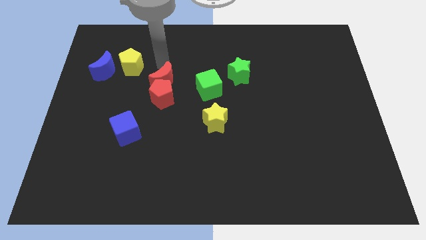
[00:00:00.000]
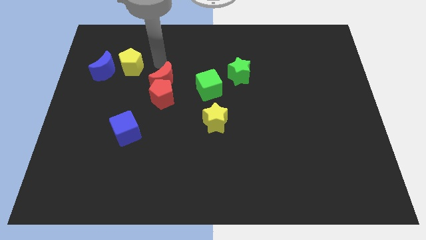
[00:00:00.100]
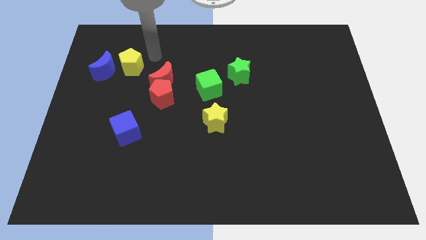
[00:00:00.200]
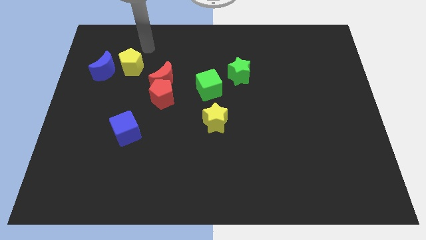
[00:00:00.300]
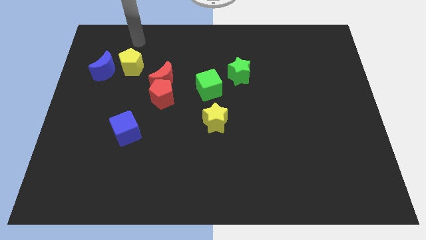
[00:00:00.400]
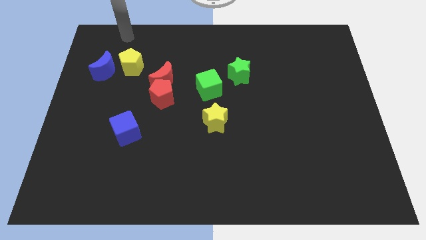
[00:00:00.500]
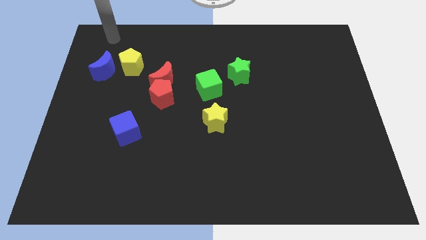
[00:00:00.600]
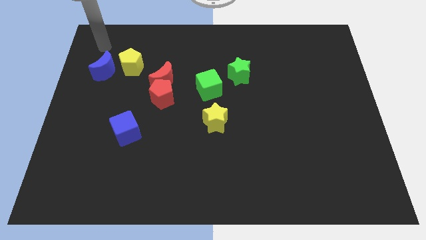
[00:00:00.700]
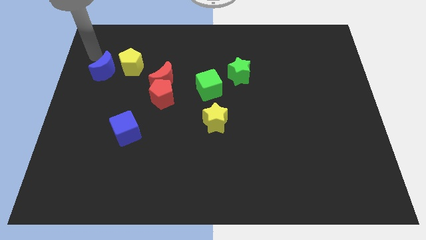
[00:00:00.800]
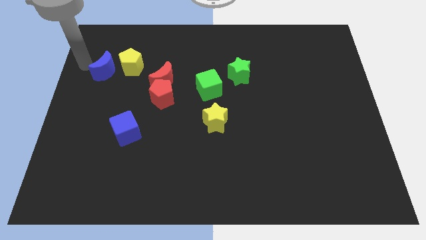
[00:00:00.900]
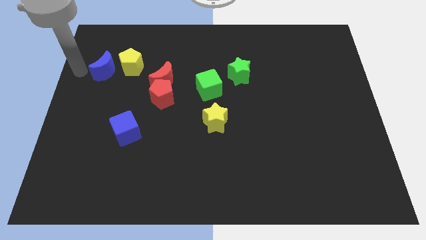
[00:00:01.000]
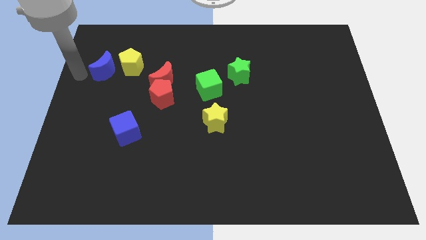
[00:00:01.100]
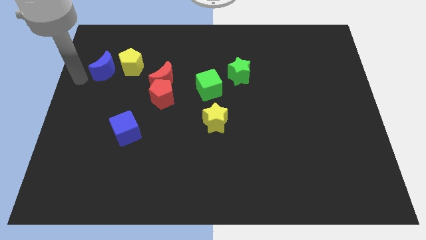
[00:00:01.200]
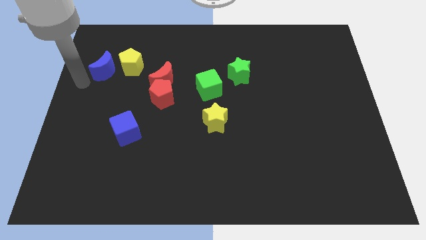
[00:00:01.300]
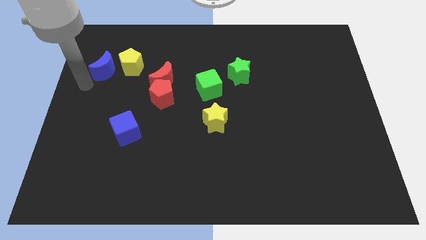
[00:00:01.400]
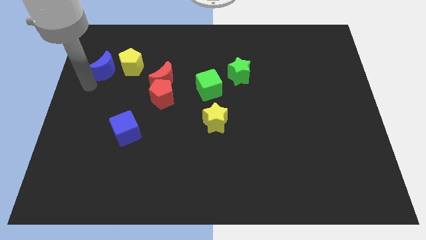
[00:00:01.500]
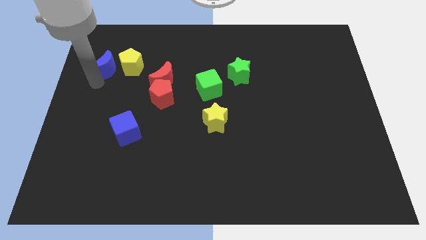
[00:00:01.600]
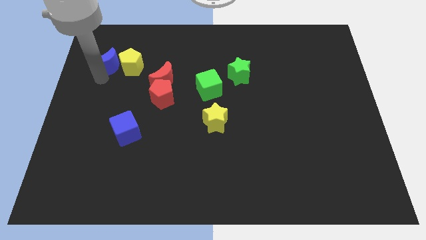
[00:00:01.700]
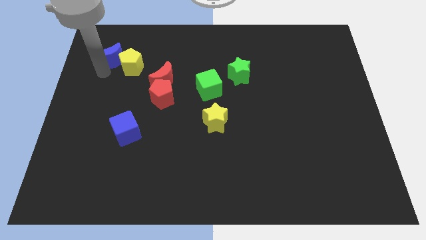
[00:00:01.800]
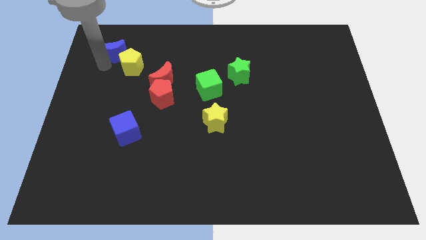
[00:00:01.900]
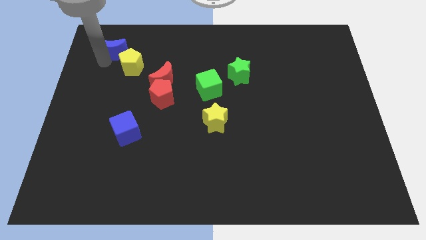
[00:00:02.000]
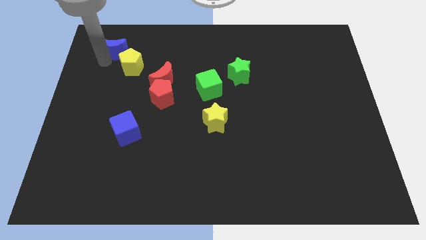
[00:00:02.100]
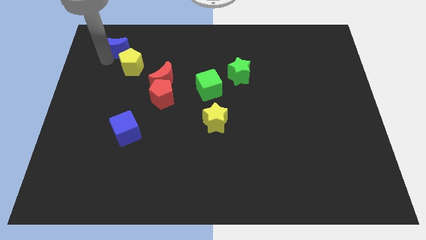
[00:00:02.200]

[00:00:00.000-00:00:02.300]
push the blue moon towards the top left of yellow pentagon

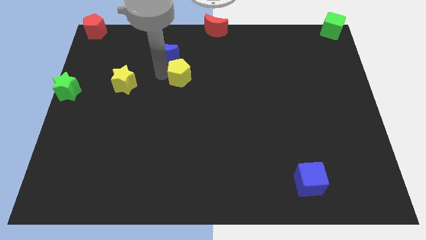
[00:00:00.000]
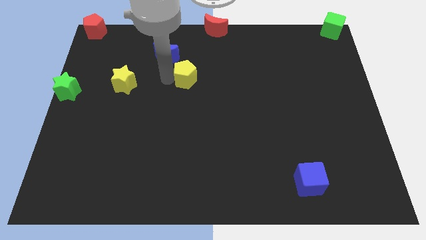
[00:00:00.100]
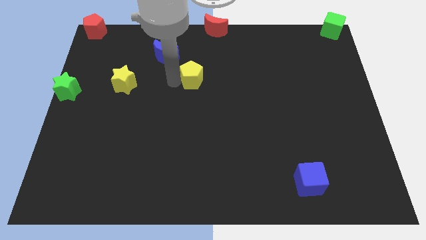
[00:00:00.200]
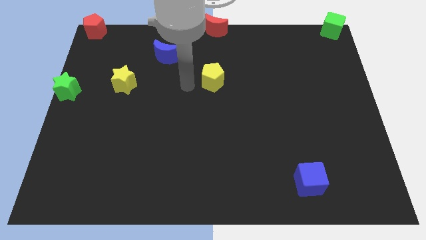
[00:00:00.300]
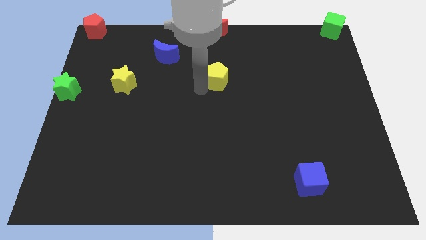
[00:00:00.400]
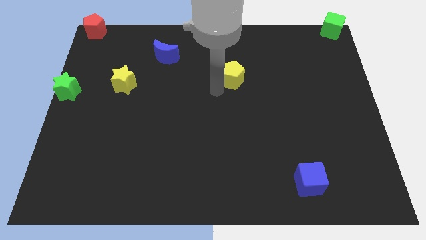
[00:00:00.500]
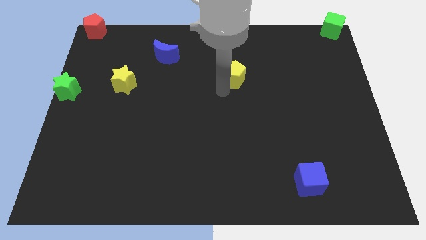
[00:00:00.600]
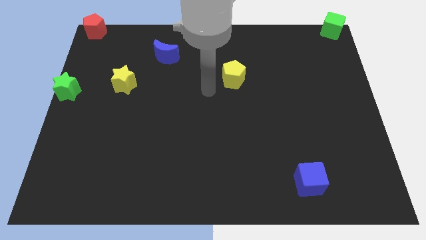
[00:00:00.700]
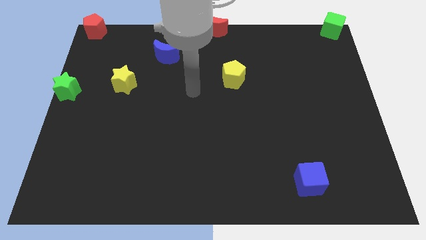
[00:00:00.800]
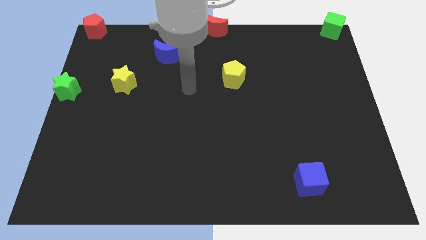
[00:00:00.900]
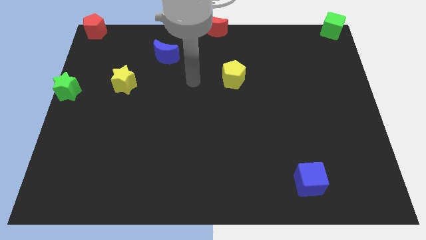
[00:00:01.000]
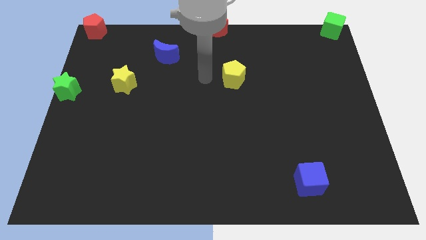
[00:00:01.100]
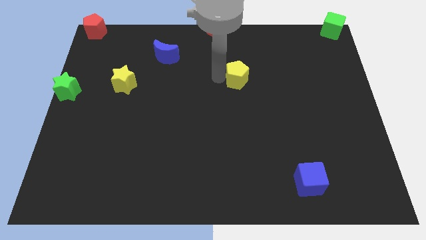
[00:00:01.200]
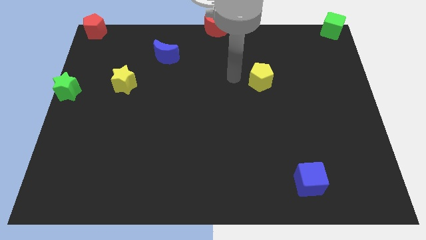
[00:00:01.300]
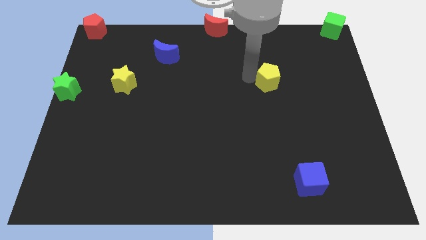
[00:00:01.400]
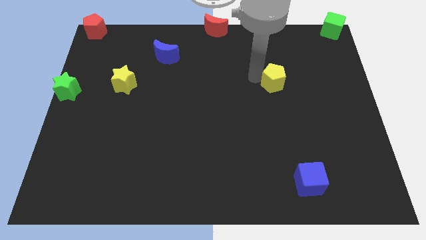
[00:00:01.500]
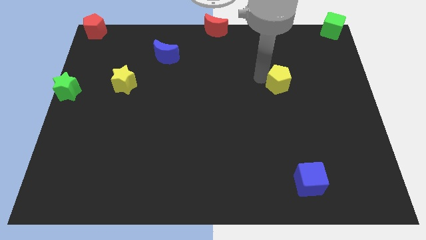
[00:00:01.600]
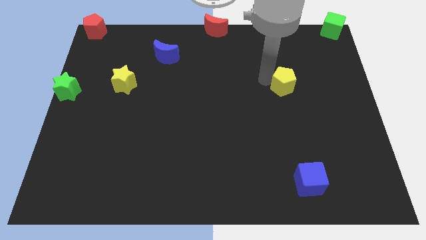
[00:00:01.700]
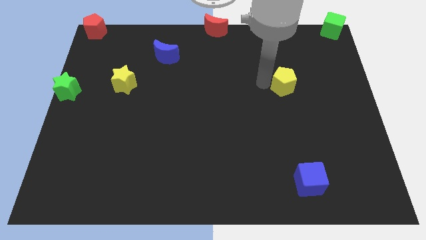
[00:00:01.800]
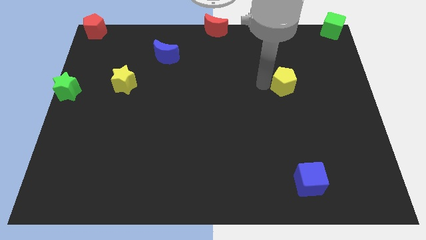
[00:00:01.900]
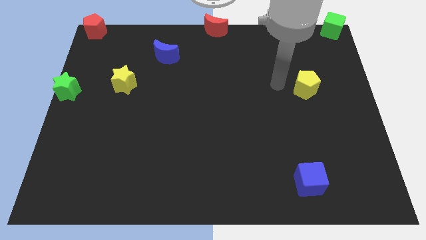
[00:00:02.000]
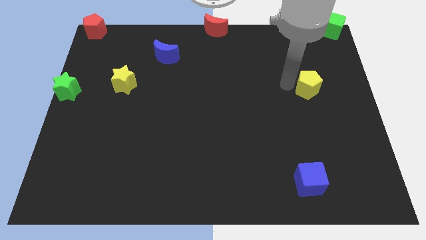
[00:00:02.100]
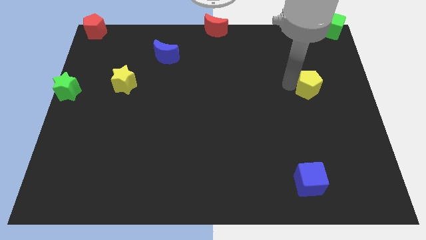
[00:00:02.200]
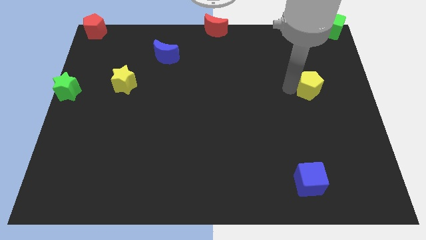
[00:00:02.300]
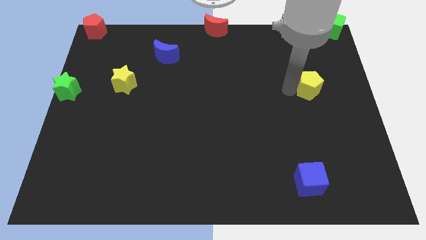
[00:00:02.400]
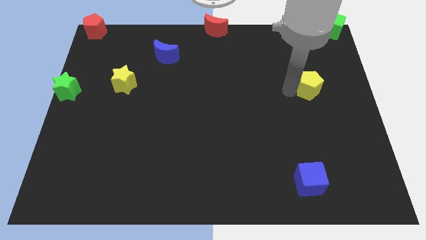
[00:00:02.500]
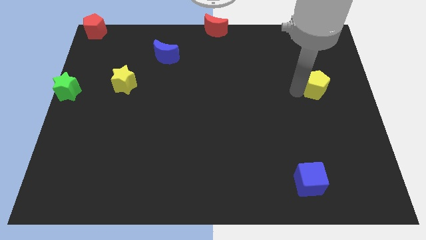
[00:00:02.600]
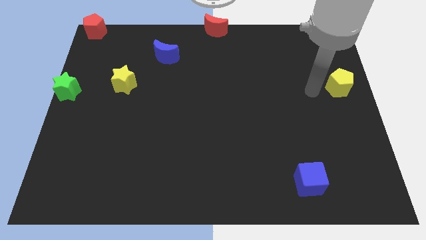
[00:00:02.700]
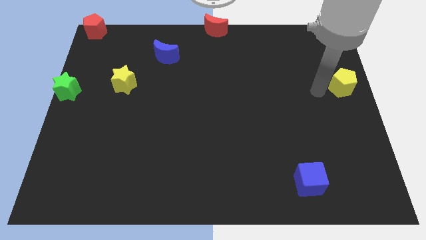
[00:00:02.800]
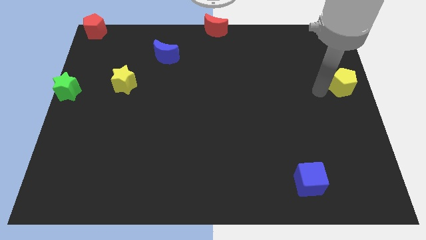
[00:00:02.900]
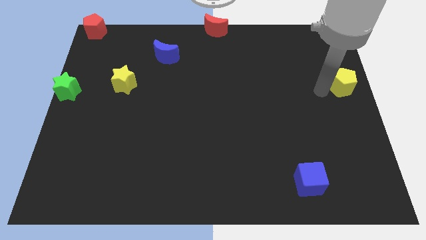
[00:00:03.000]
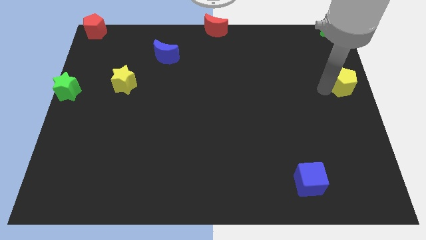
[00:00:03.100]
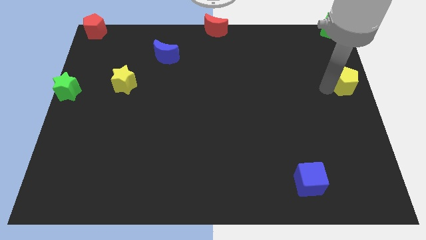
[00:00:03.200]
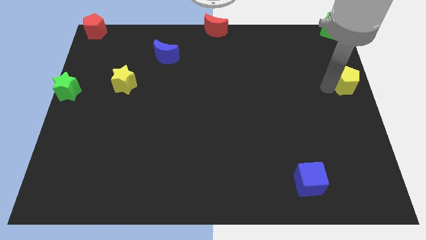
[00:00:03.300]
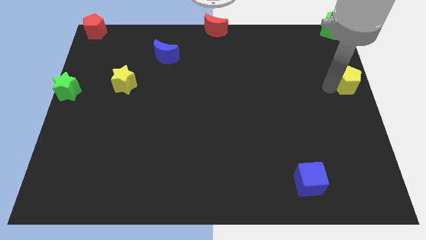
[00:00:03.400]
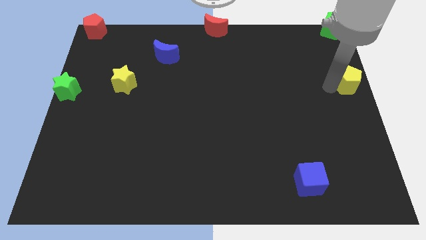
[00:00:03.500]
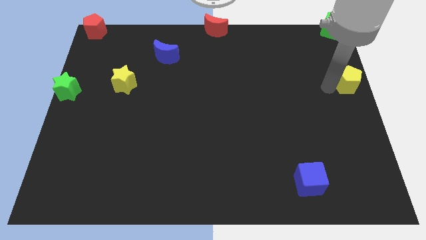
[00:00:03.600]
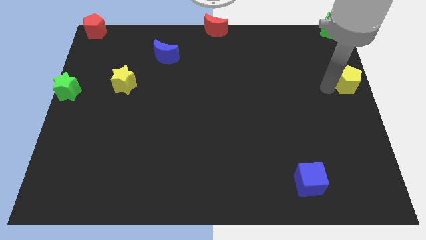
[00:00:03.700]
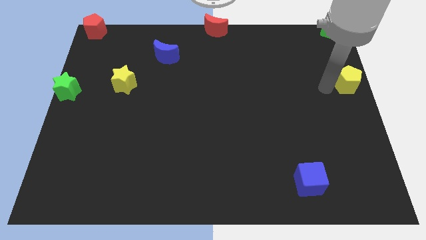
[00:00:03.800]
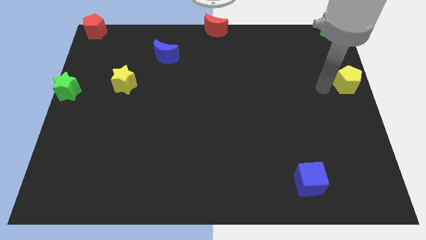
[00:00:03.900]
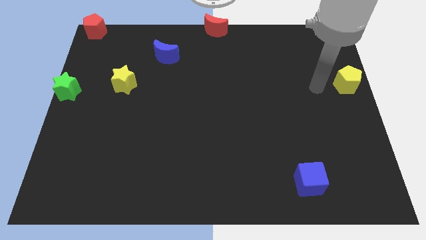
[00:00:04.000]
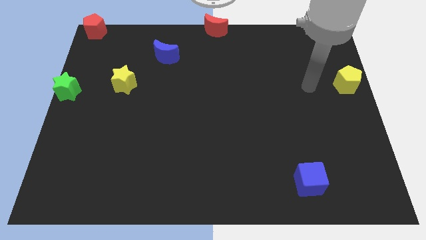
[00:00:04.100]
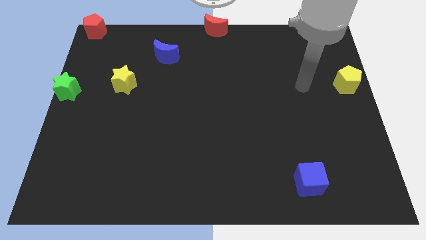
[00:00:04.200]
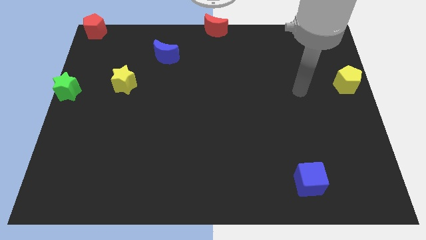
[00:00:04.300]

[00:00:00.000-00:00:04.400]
move the yellow pentagon to the right center of the board

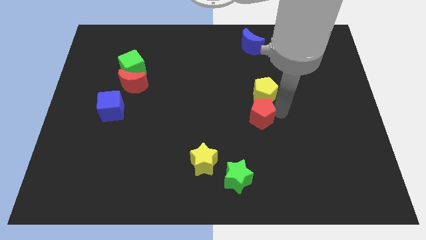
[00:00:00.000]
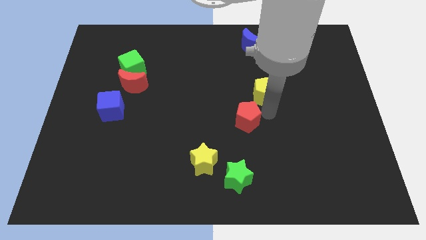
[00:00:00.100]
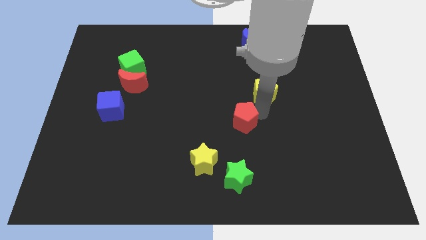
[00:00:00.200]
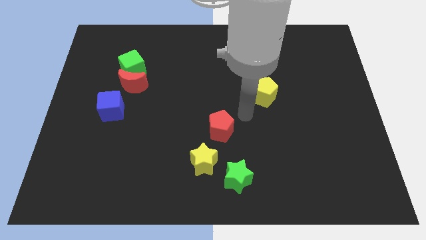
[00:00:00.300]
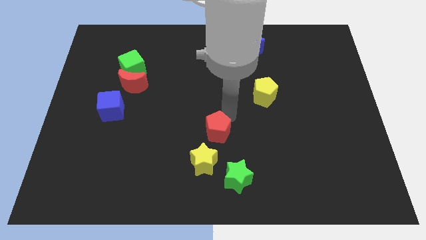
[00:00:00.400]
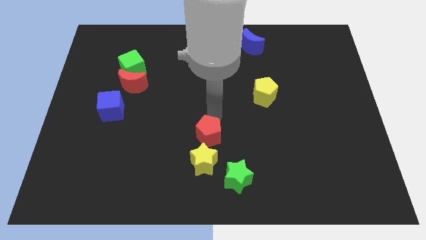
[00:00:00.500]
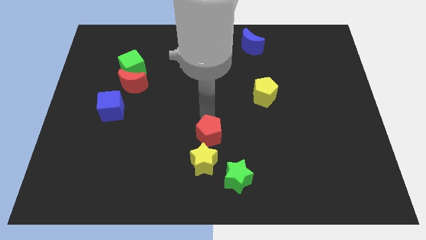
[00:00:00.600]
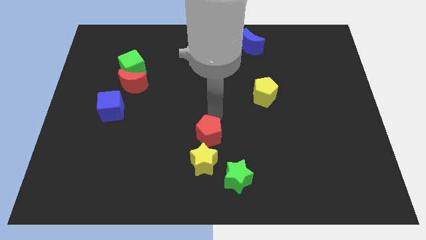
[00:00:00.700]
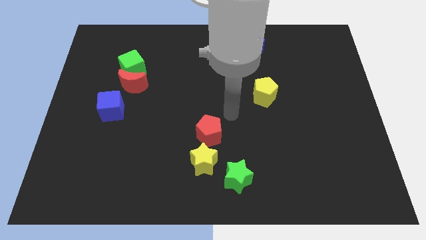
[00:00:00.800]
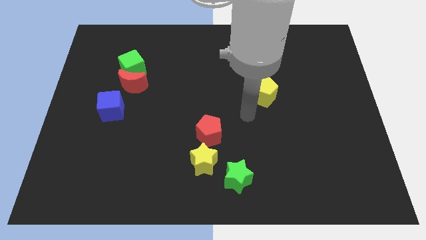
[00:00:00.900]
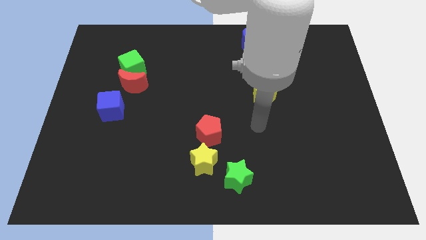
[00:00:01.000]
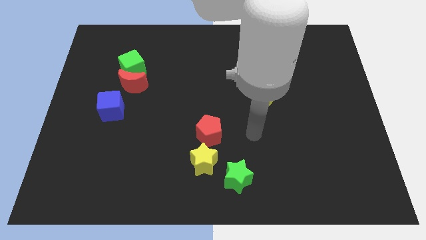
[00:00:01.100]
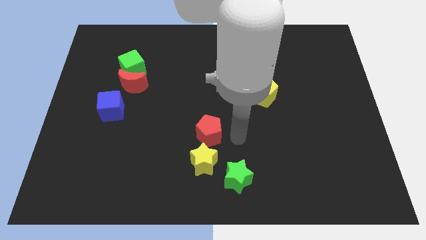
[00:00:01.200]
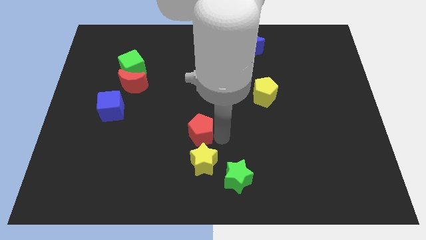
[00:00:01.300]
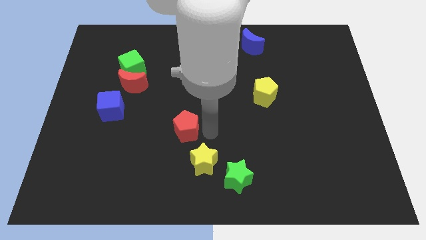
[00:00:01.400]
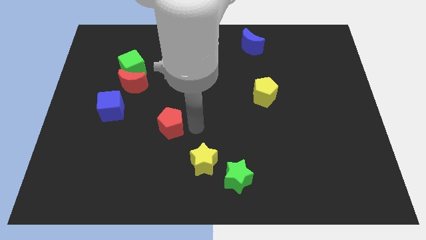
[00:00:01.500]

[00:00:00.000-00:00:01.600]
slide the red pentagon away from the yellow pentagon

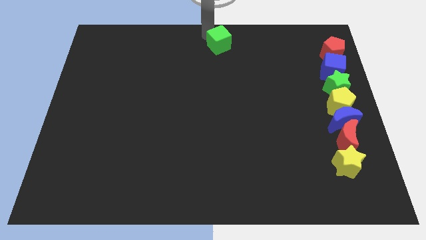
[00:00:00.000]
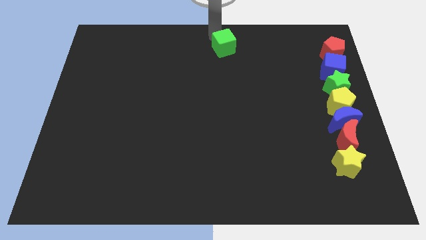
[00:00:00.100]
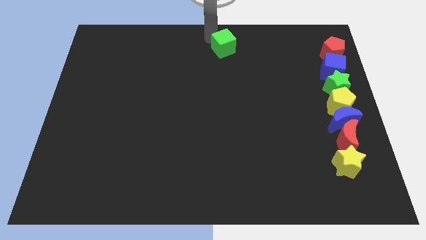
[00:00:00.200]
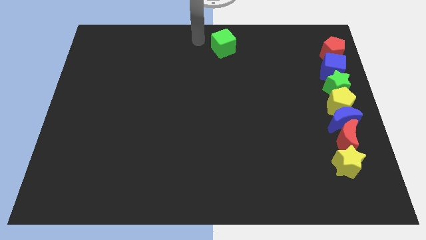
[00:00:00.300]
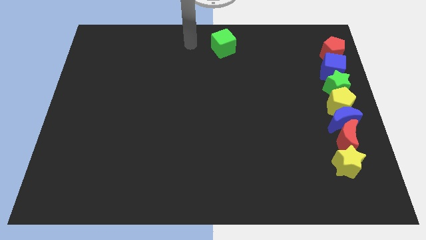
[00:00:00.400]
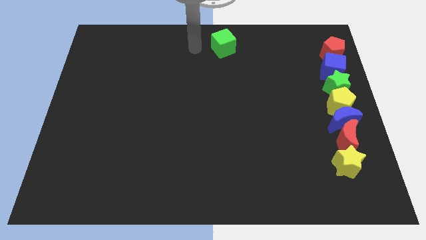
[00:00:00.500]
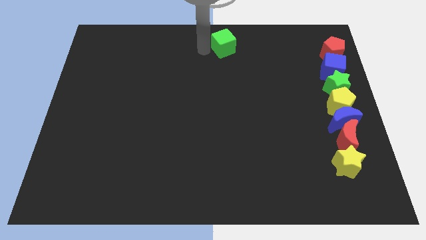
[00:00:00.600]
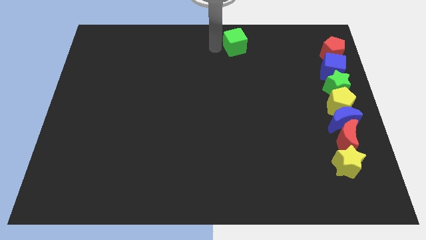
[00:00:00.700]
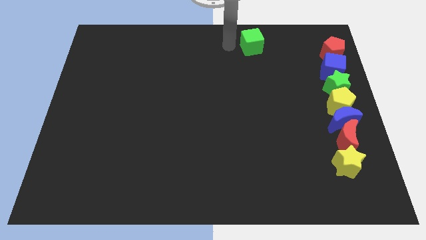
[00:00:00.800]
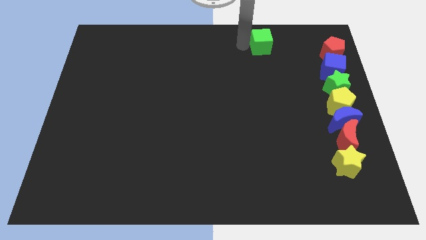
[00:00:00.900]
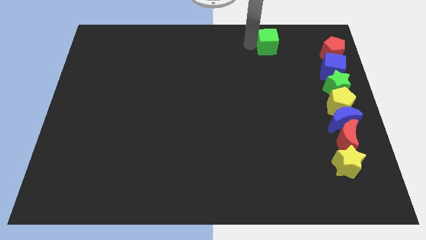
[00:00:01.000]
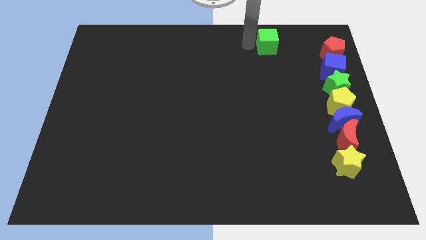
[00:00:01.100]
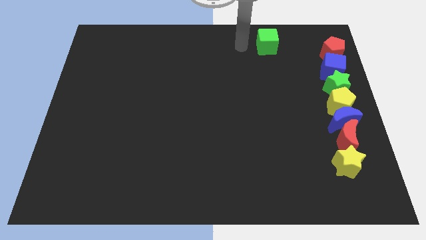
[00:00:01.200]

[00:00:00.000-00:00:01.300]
move green block to the right
